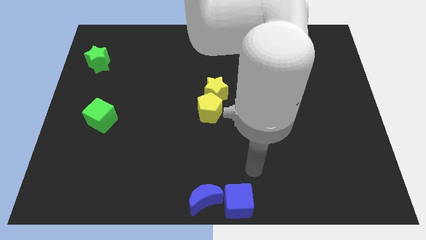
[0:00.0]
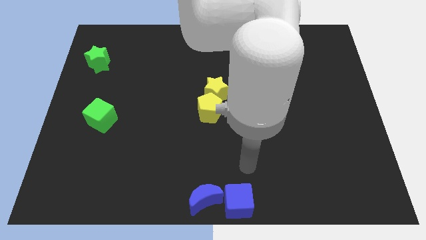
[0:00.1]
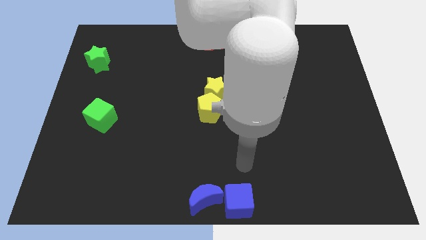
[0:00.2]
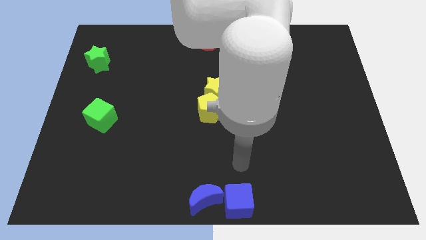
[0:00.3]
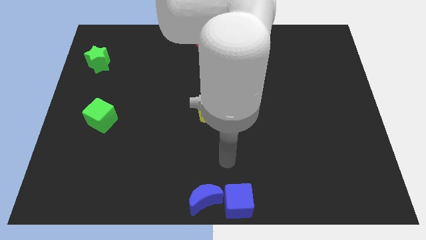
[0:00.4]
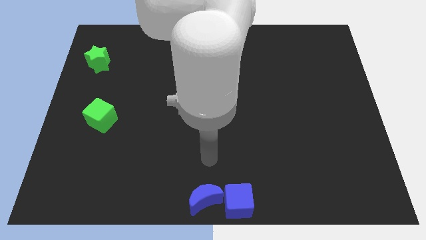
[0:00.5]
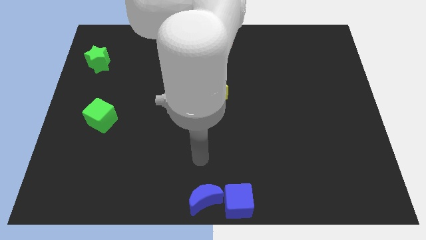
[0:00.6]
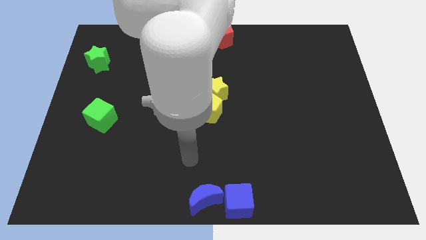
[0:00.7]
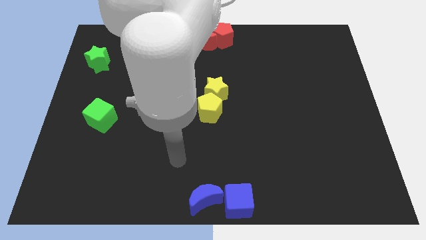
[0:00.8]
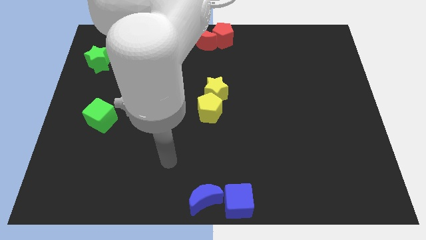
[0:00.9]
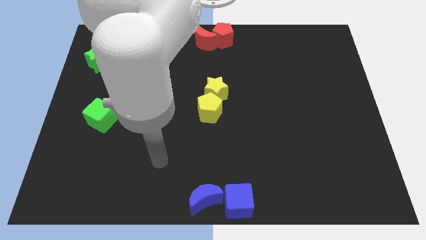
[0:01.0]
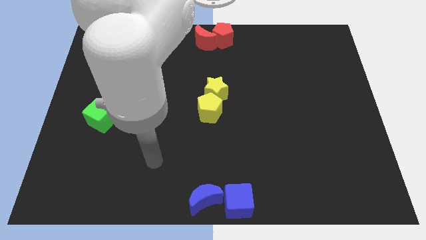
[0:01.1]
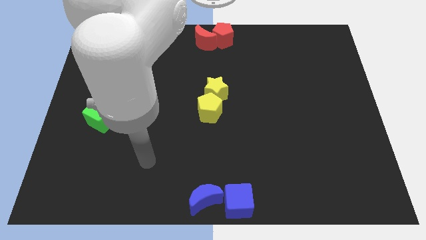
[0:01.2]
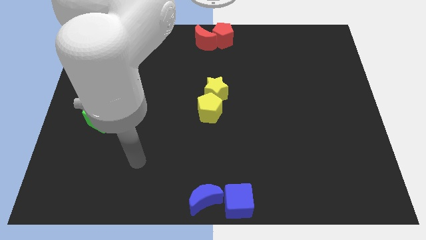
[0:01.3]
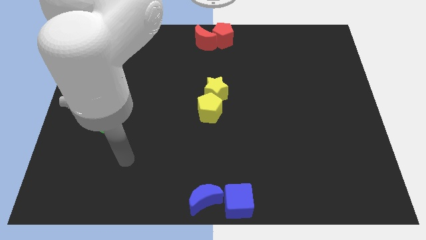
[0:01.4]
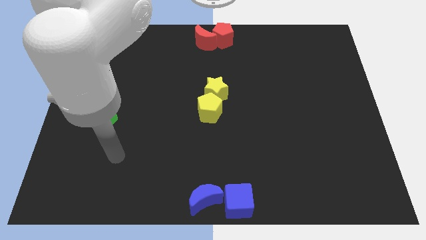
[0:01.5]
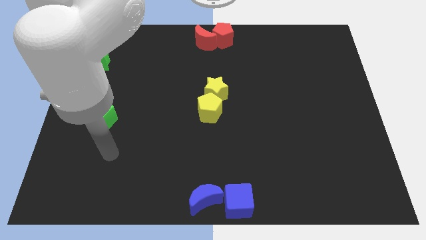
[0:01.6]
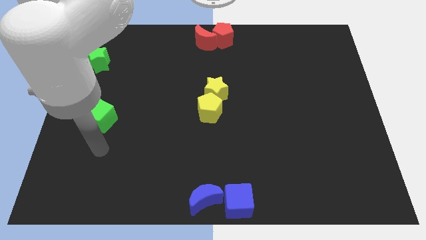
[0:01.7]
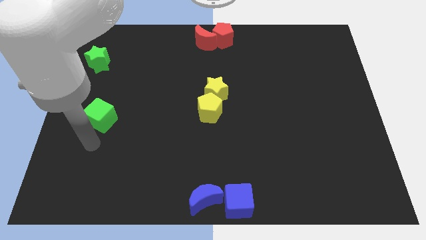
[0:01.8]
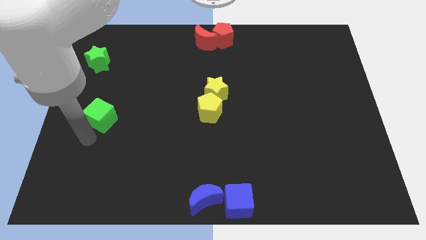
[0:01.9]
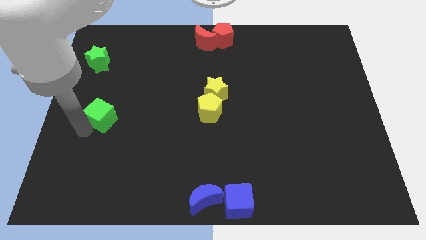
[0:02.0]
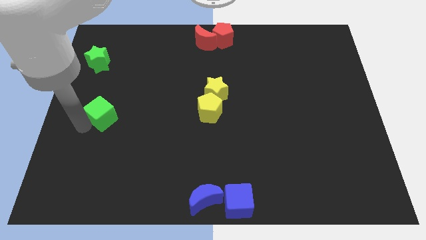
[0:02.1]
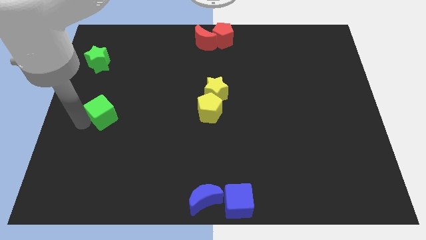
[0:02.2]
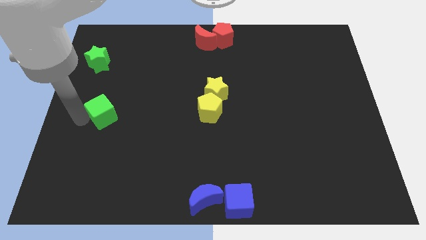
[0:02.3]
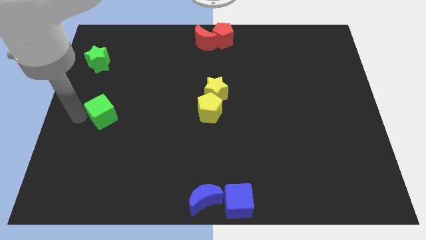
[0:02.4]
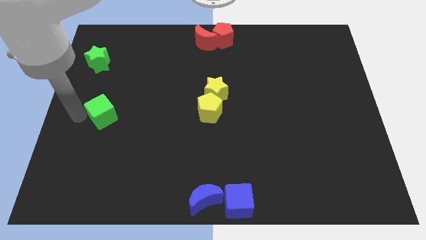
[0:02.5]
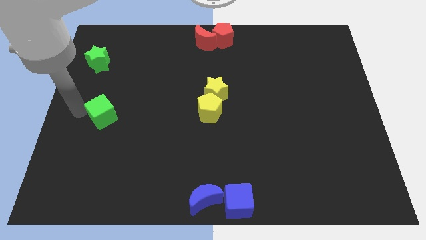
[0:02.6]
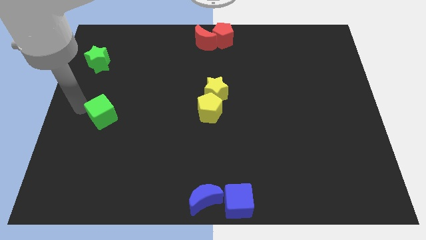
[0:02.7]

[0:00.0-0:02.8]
touch the arm to the left of green cube

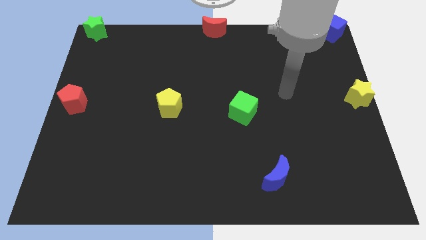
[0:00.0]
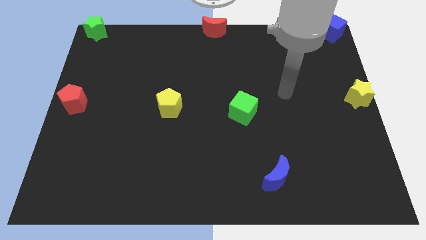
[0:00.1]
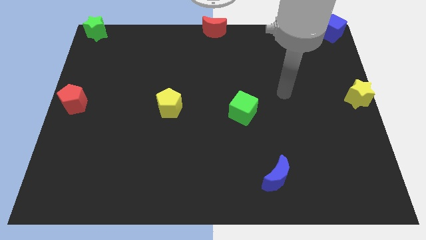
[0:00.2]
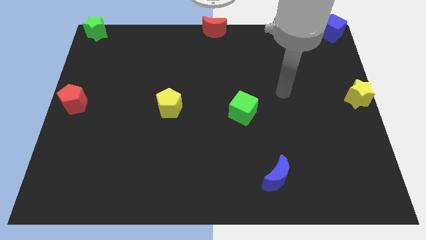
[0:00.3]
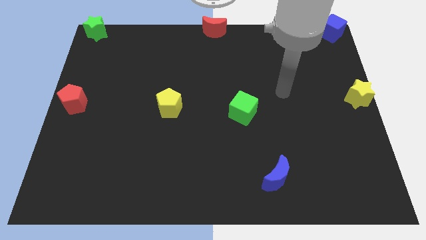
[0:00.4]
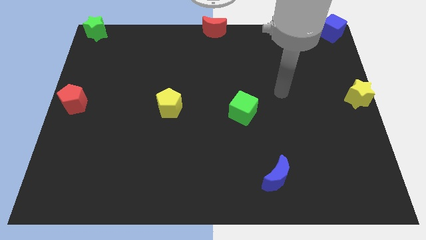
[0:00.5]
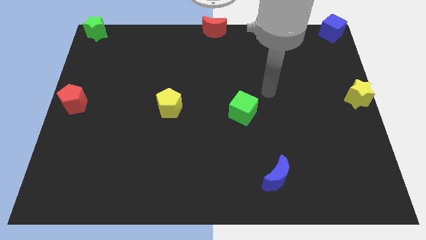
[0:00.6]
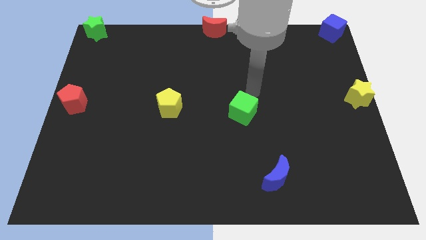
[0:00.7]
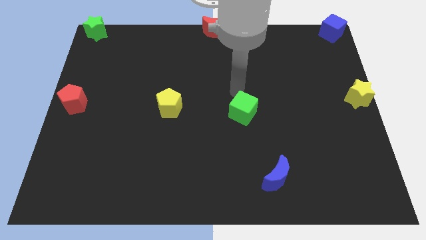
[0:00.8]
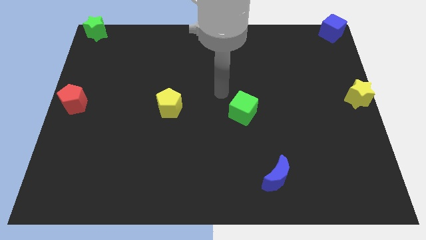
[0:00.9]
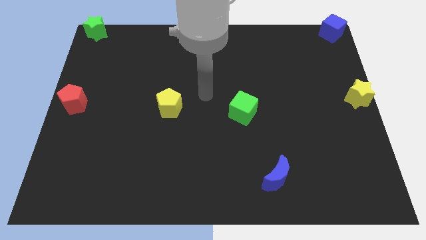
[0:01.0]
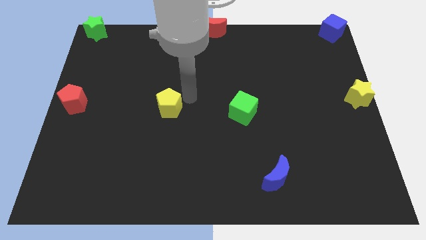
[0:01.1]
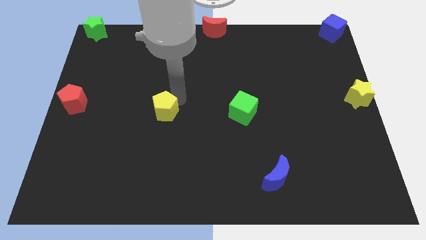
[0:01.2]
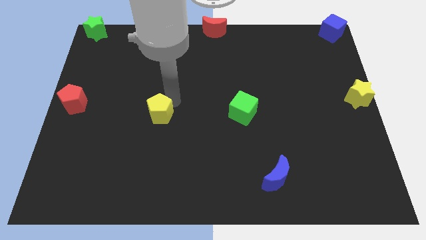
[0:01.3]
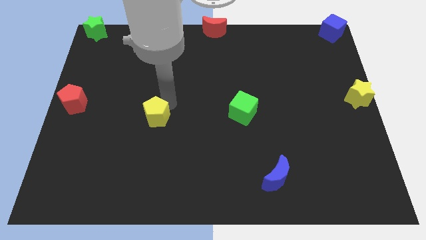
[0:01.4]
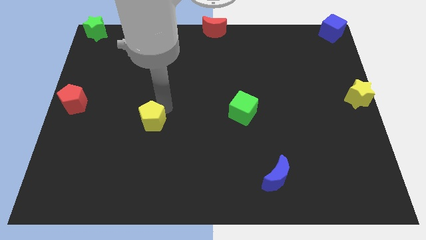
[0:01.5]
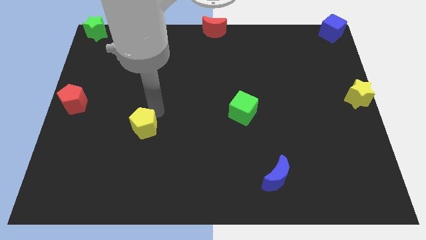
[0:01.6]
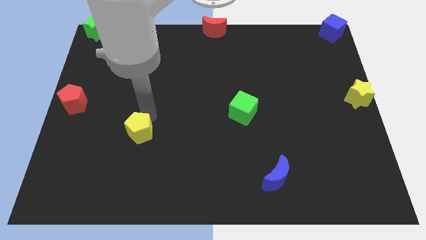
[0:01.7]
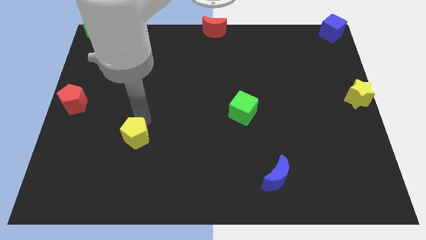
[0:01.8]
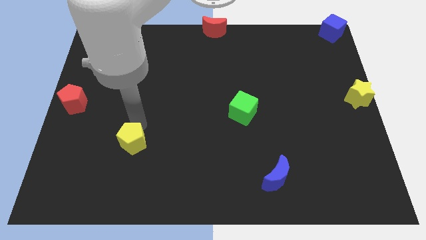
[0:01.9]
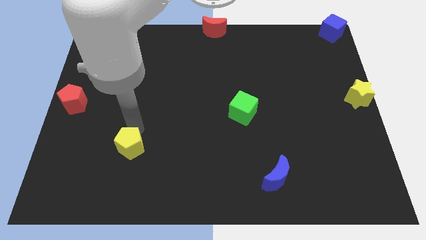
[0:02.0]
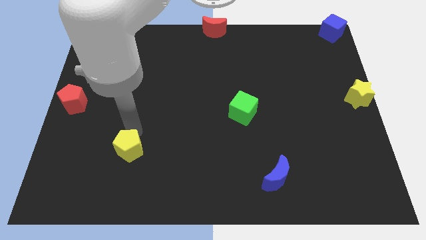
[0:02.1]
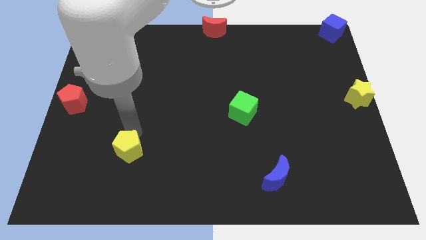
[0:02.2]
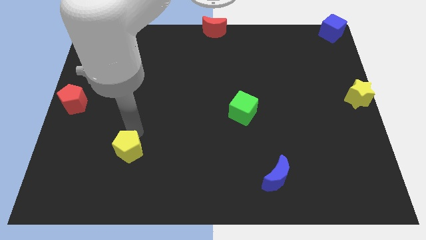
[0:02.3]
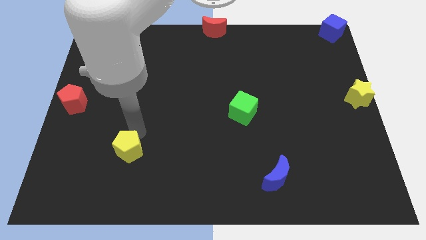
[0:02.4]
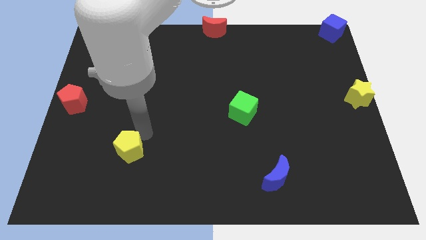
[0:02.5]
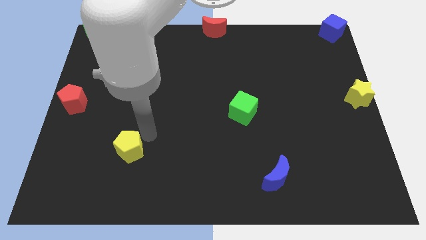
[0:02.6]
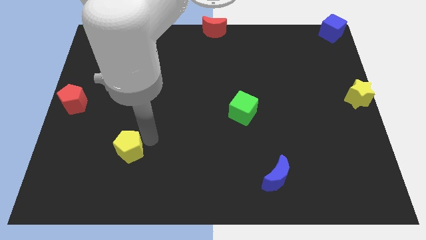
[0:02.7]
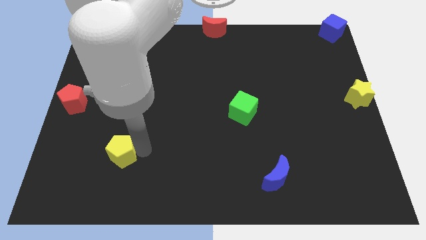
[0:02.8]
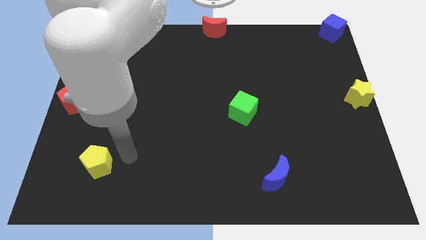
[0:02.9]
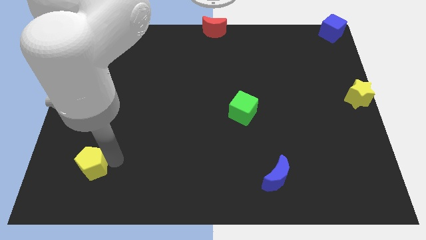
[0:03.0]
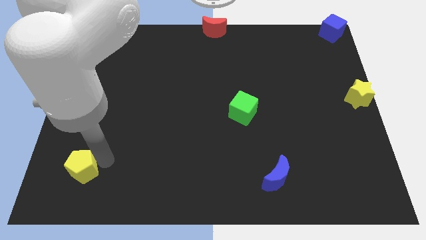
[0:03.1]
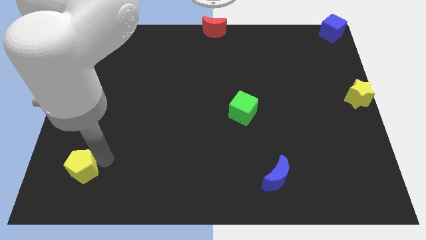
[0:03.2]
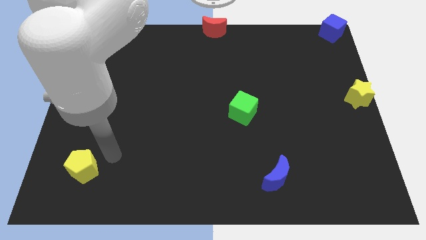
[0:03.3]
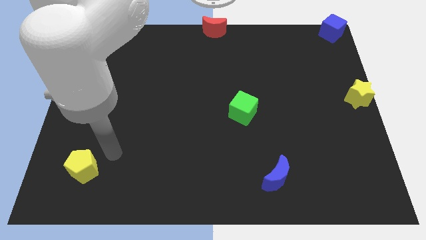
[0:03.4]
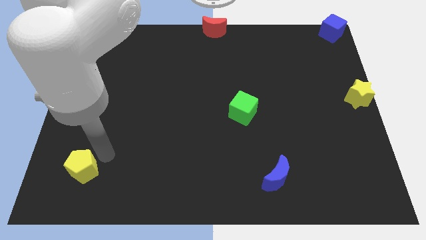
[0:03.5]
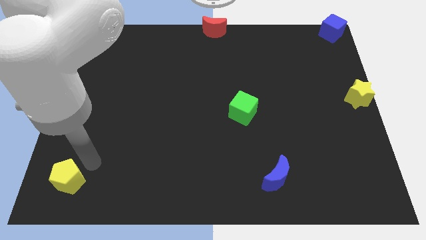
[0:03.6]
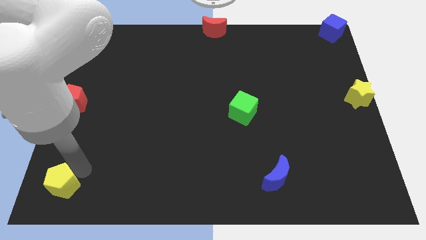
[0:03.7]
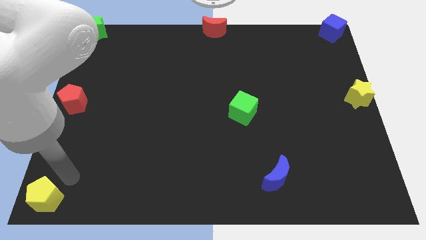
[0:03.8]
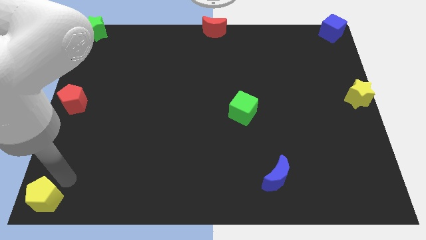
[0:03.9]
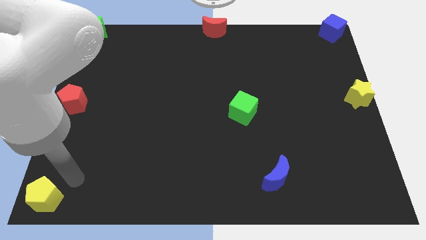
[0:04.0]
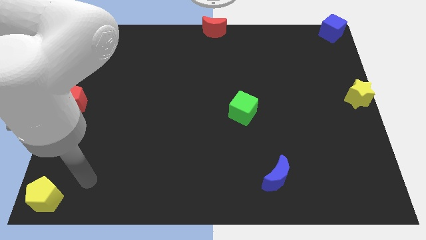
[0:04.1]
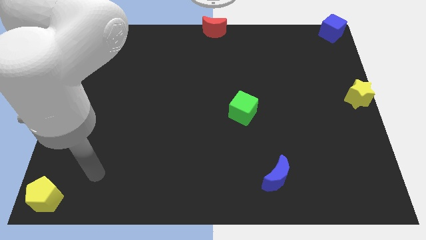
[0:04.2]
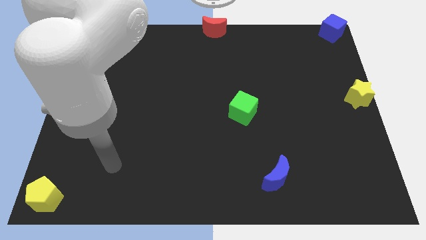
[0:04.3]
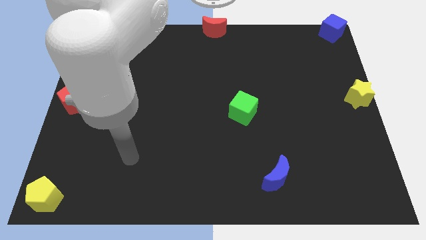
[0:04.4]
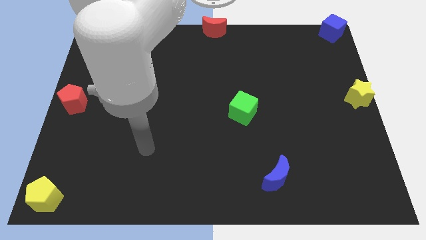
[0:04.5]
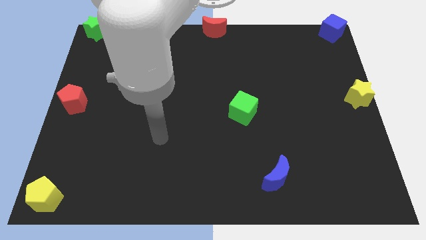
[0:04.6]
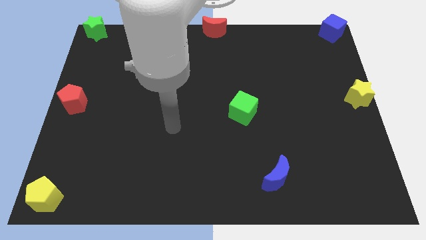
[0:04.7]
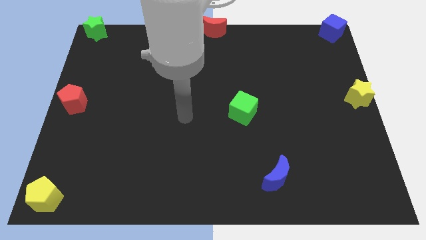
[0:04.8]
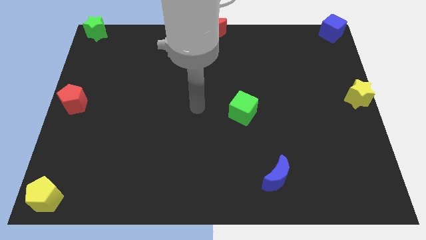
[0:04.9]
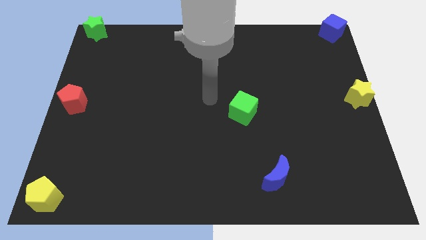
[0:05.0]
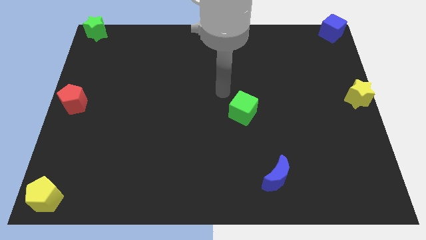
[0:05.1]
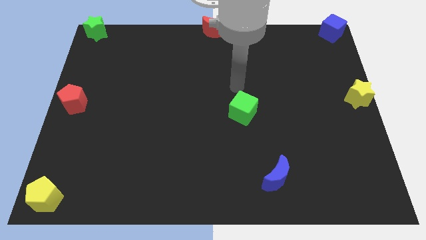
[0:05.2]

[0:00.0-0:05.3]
move the yellow pentagon to the bottom left of the board

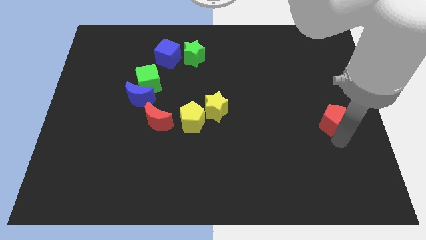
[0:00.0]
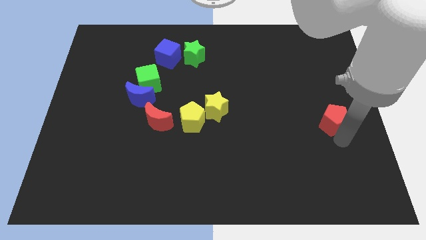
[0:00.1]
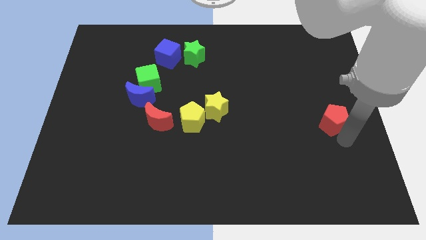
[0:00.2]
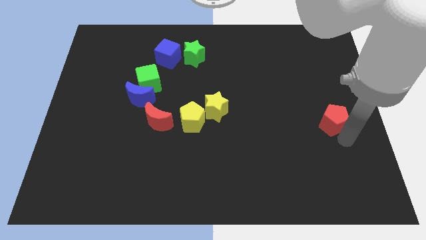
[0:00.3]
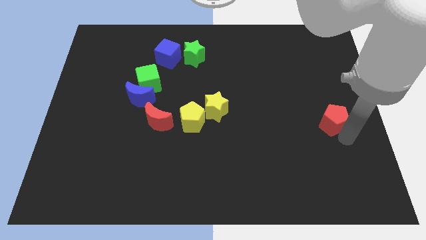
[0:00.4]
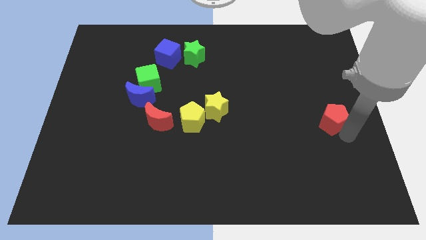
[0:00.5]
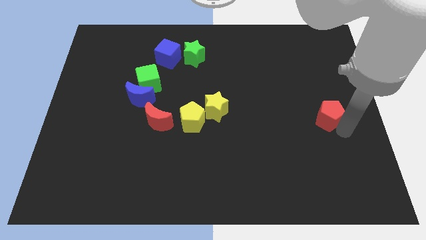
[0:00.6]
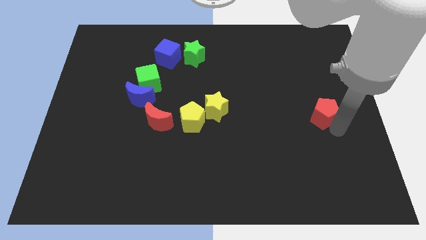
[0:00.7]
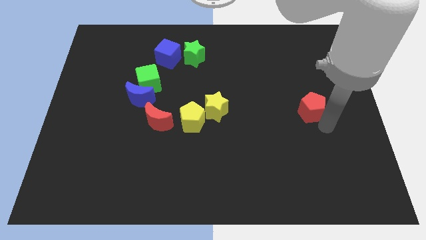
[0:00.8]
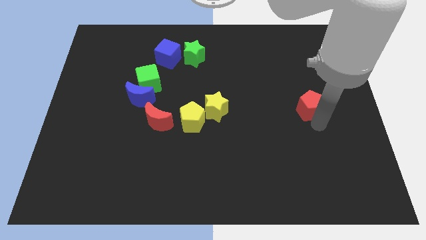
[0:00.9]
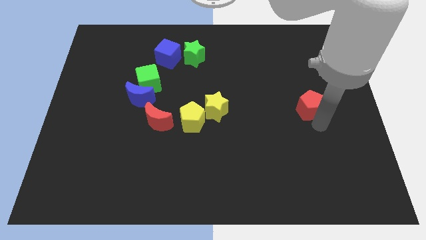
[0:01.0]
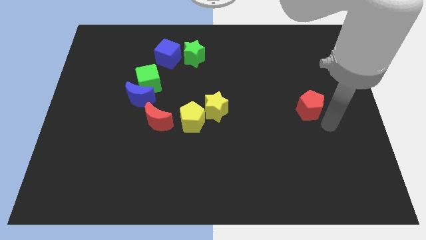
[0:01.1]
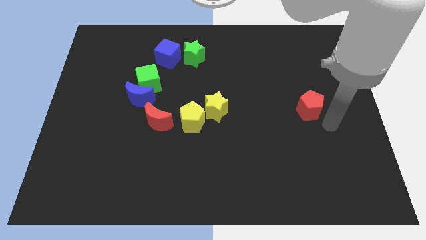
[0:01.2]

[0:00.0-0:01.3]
push the red pentagon towards the center of the board
